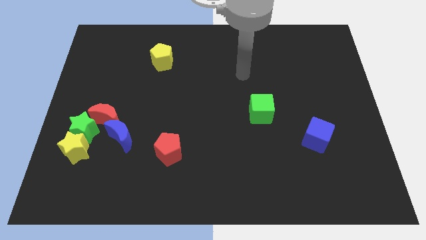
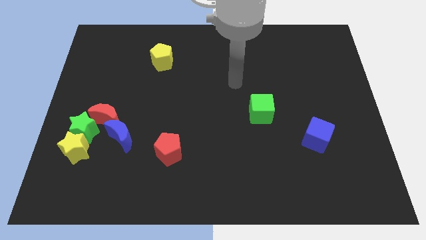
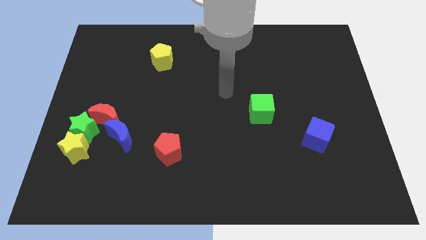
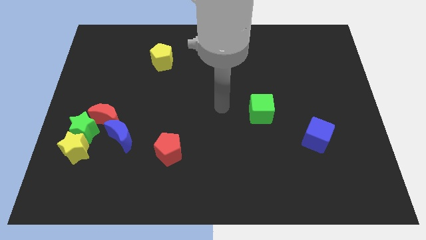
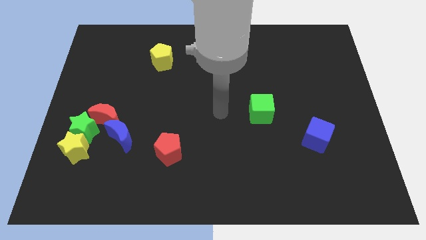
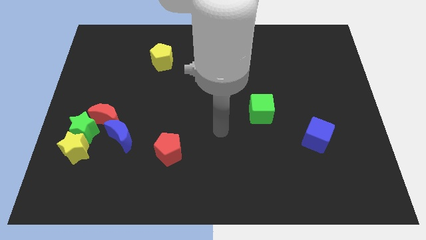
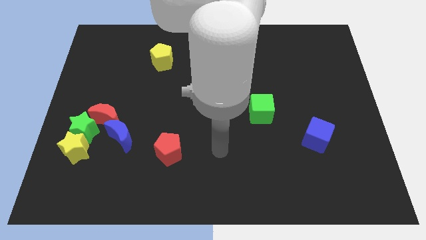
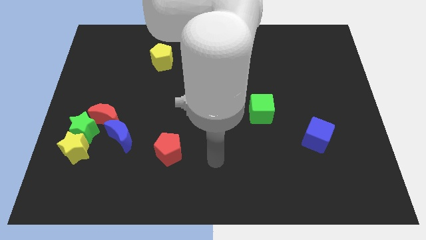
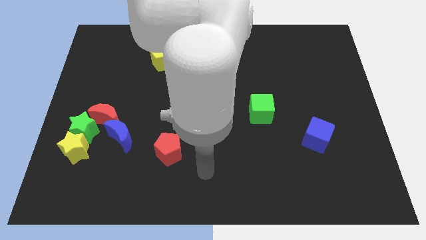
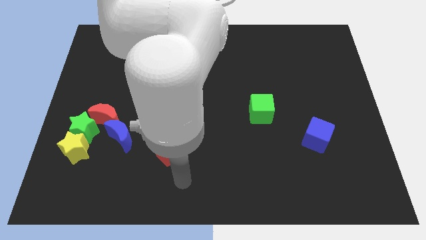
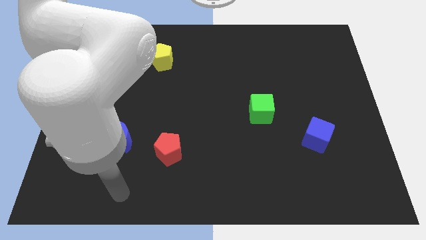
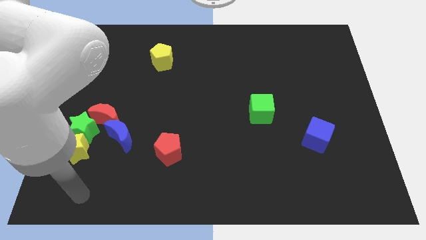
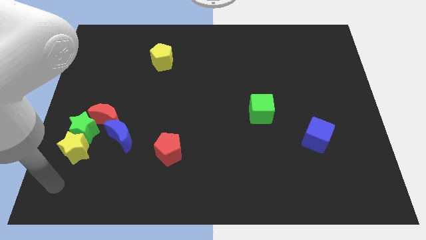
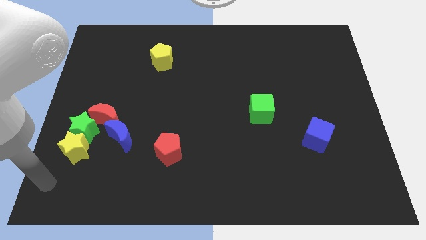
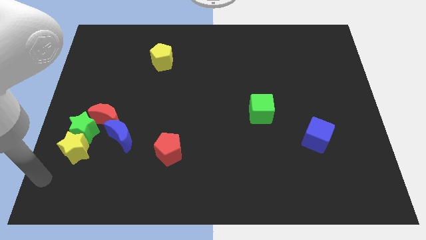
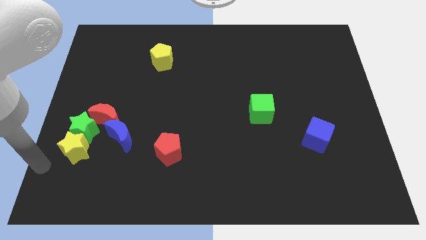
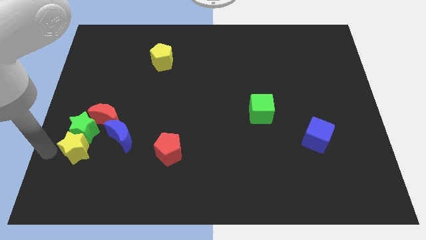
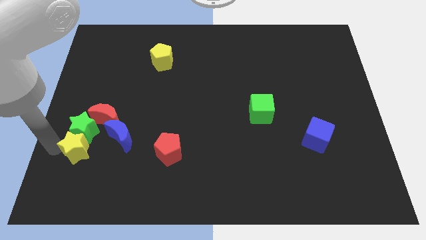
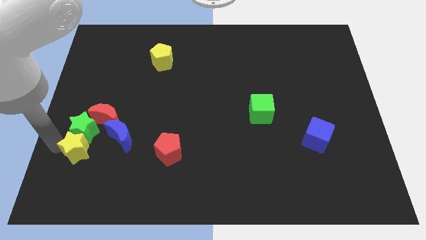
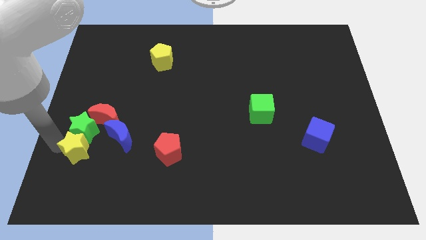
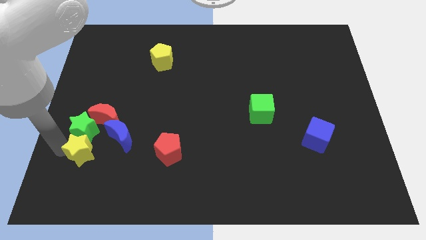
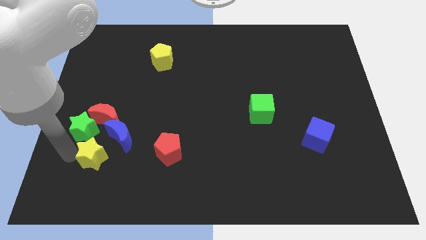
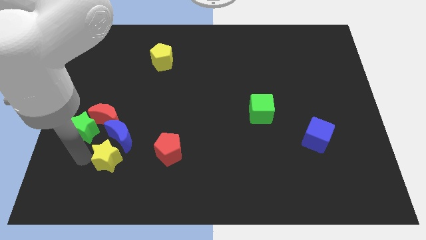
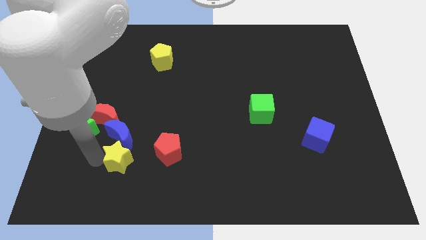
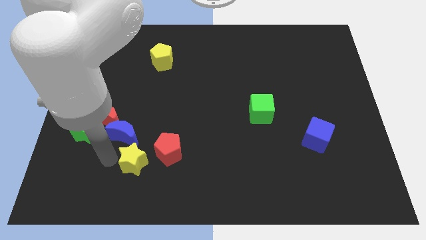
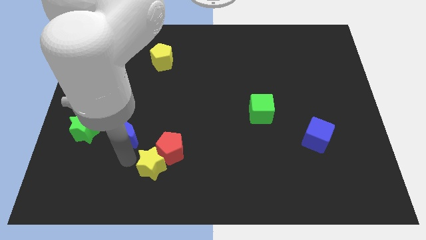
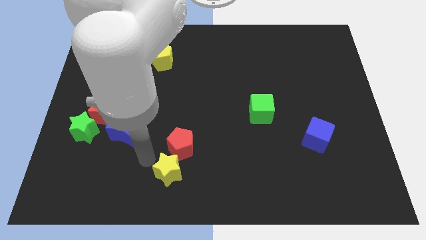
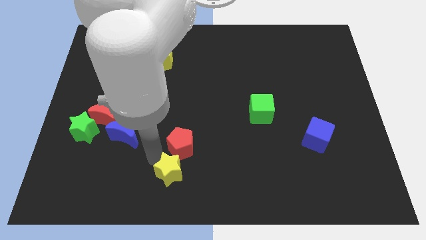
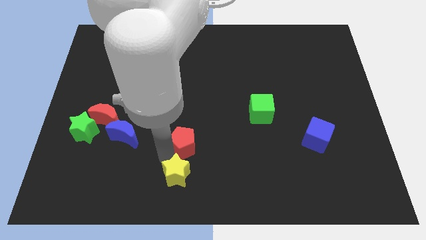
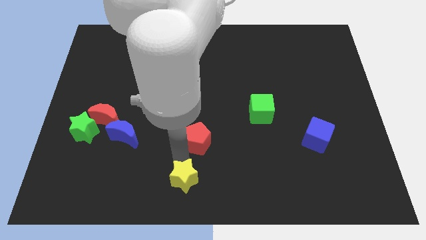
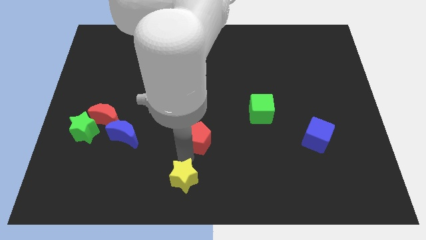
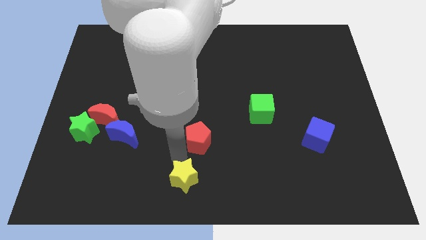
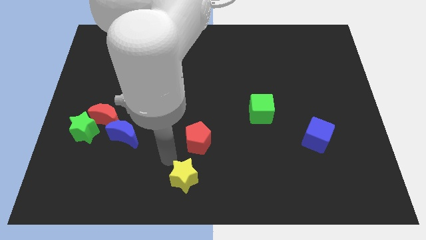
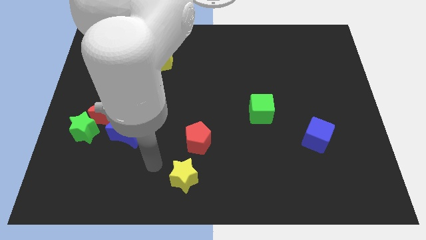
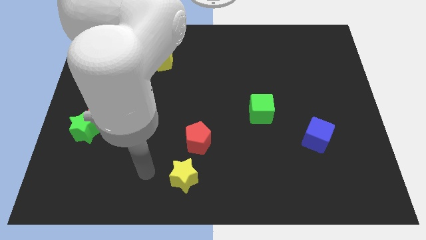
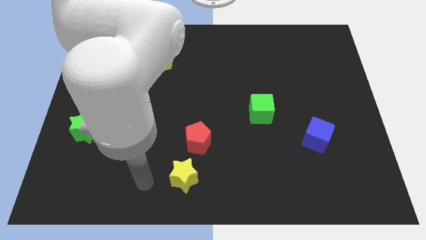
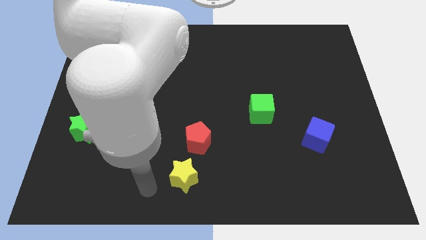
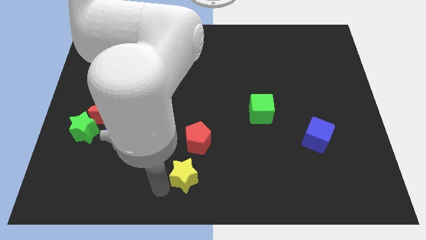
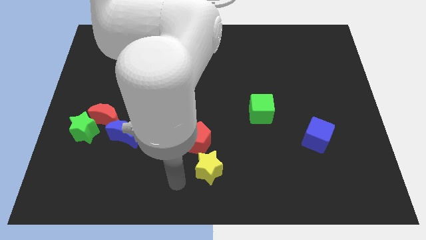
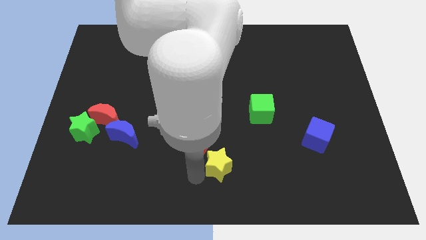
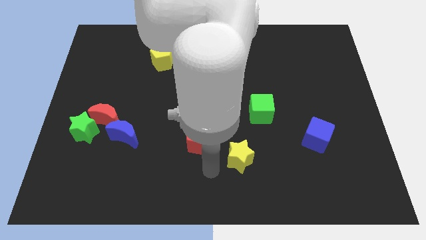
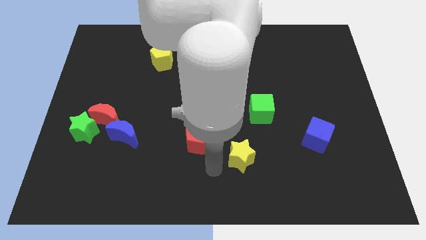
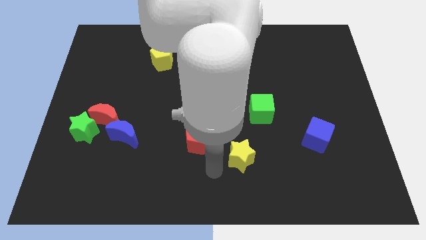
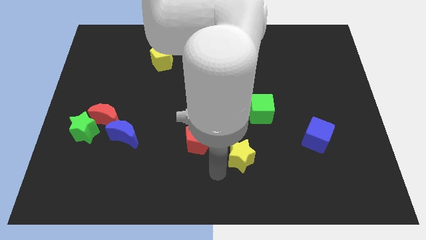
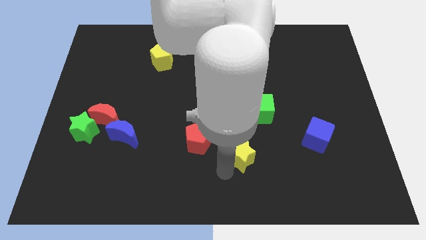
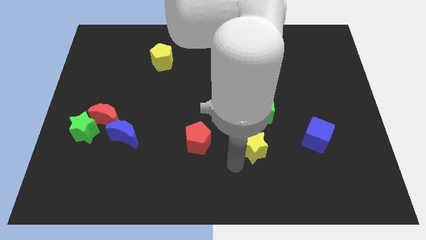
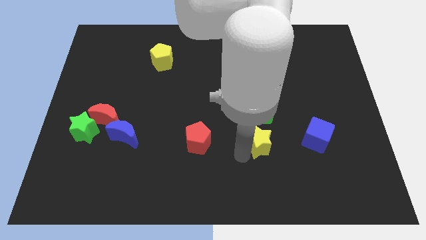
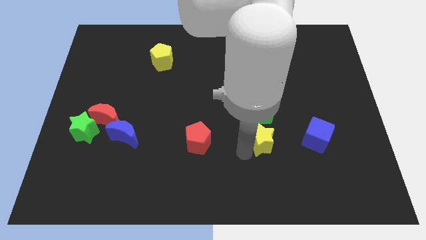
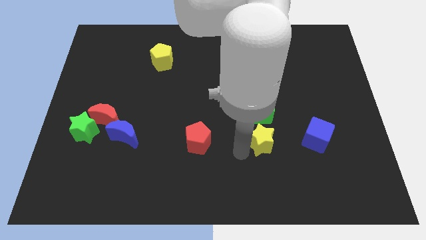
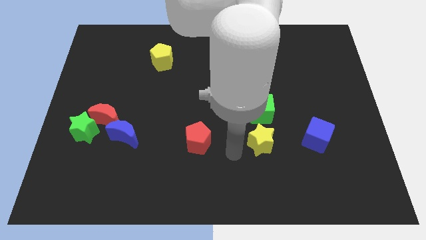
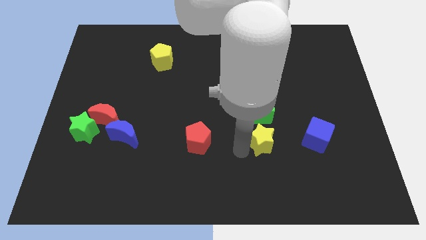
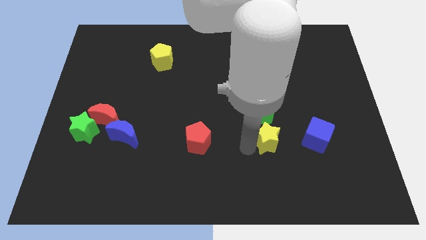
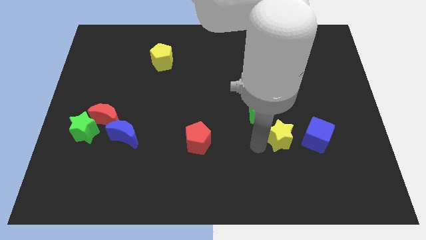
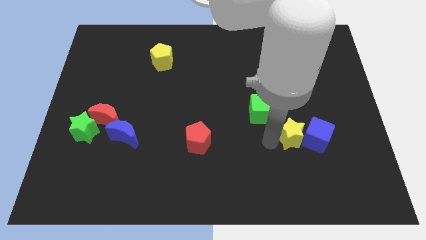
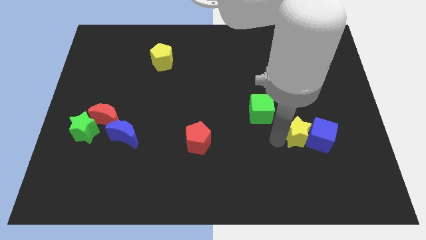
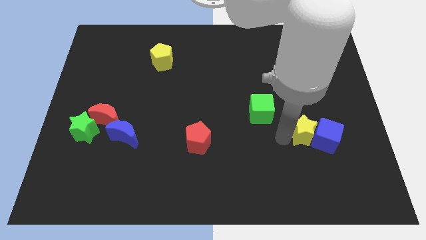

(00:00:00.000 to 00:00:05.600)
move the yellow star towards the blue cube

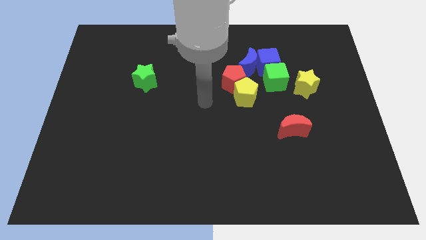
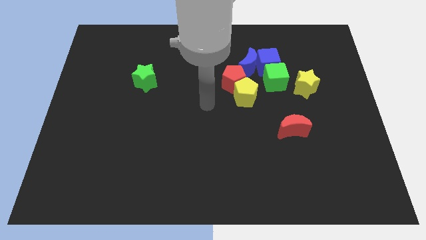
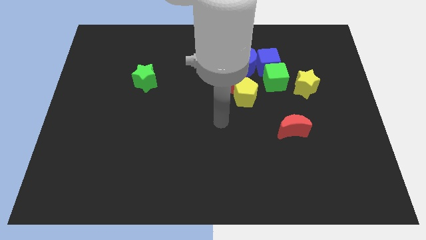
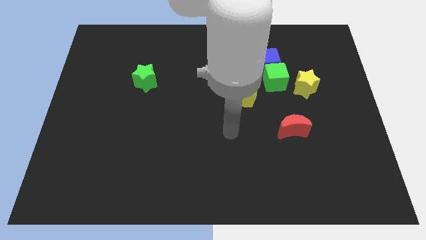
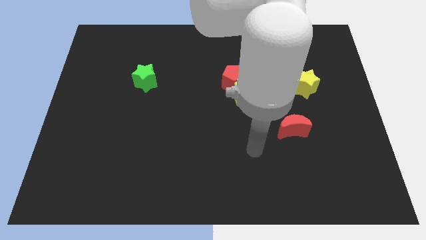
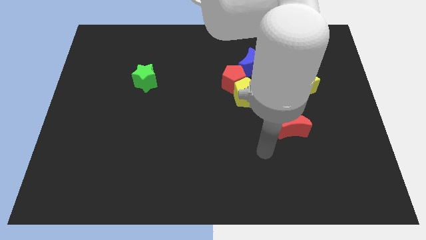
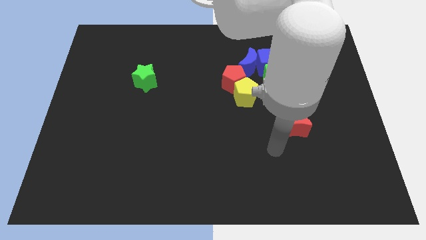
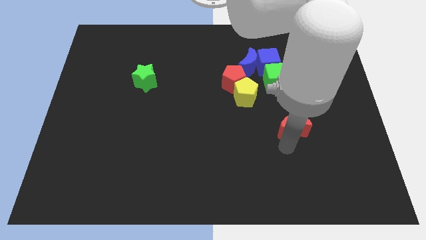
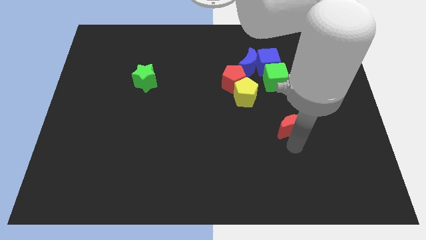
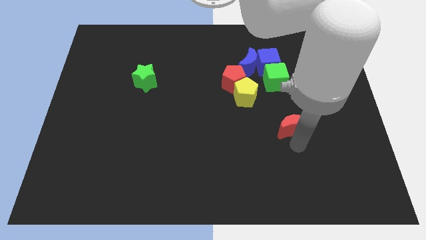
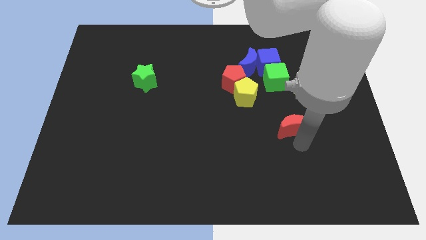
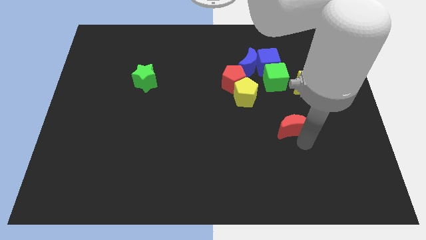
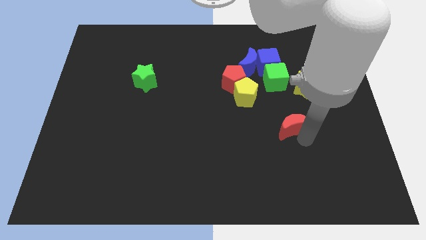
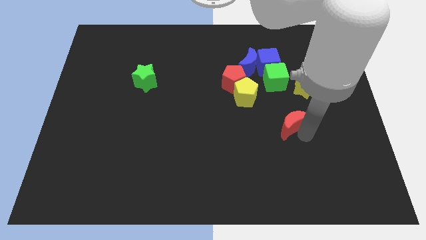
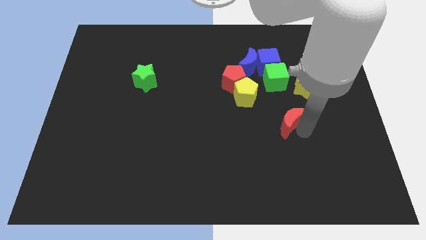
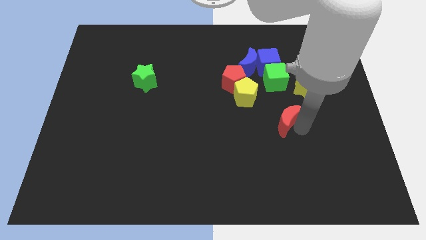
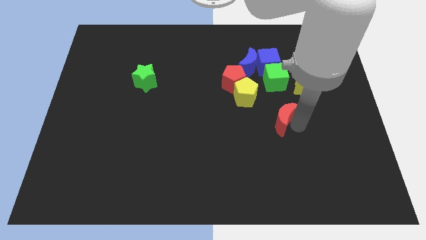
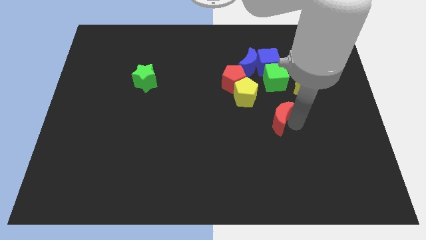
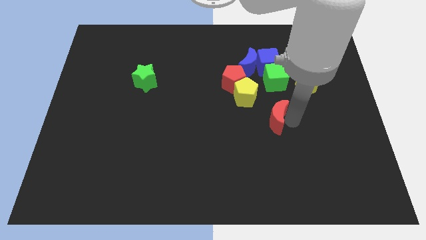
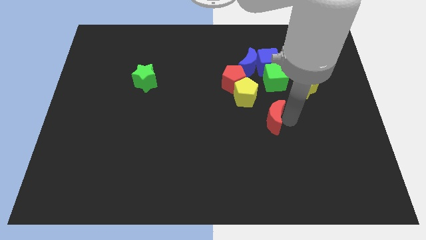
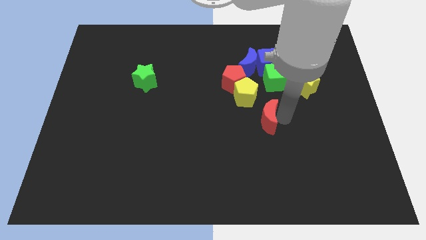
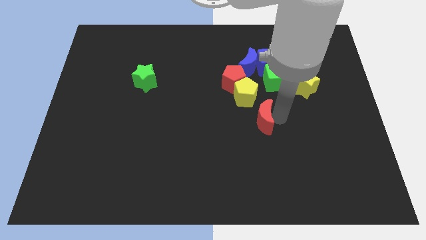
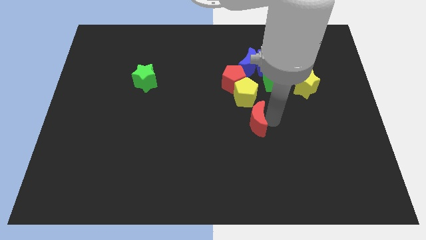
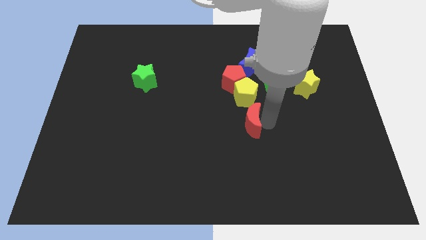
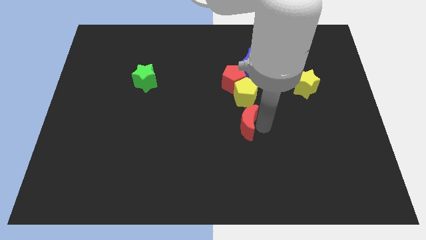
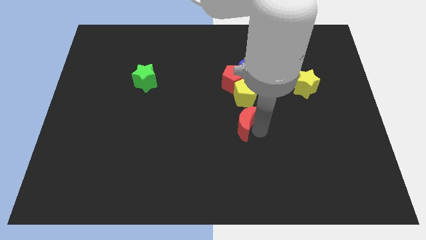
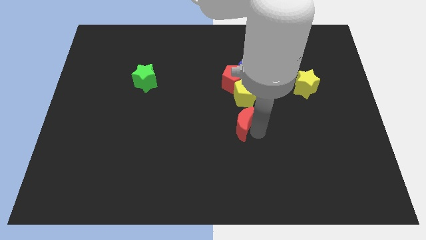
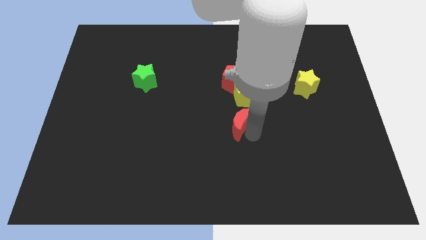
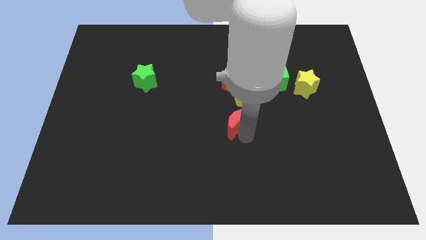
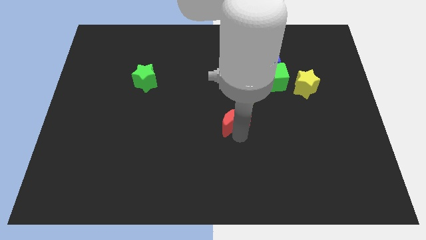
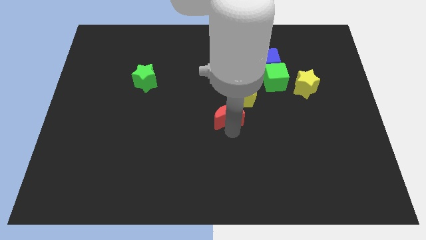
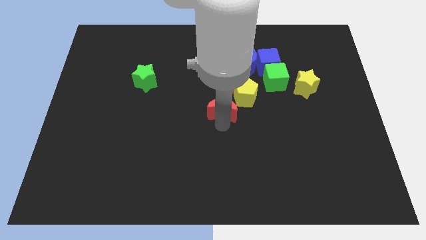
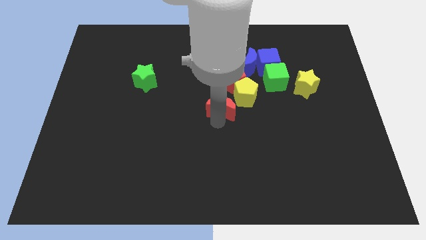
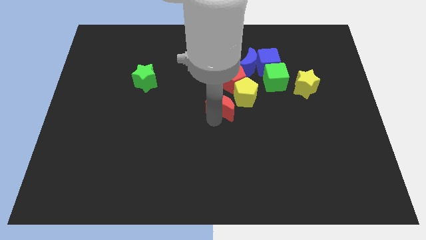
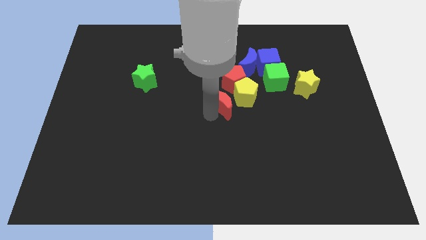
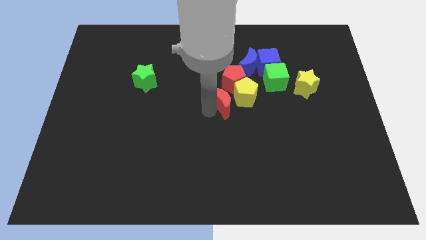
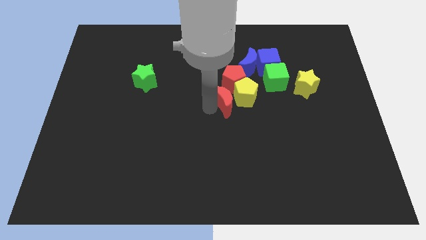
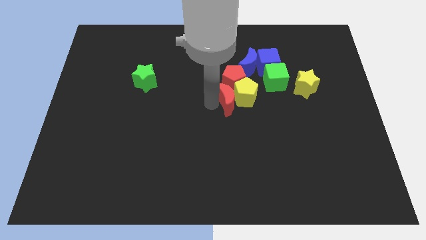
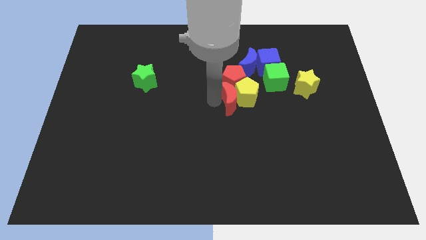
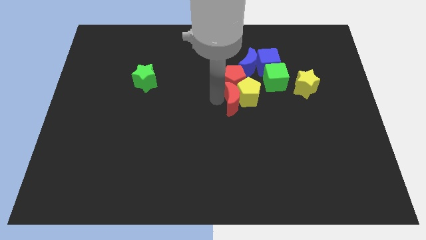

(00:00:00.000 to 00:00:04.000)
slide the red moon to the red pentagon
